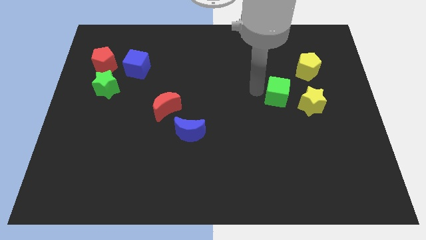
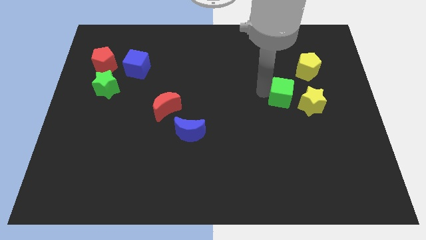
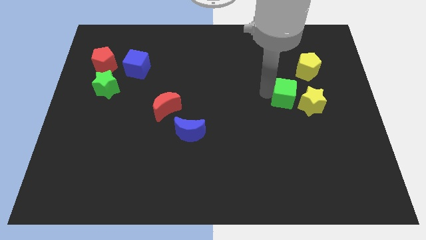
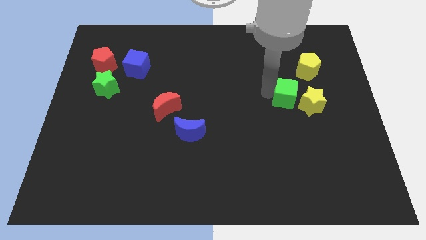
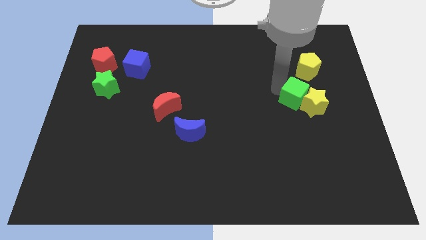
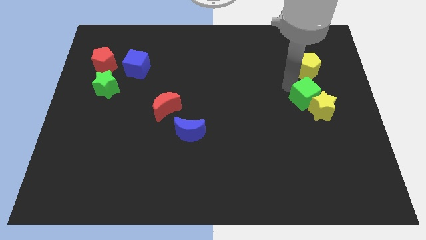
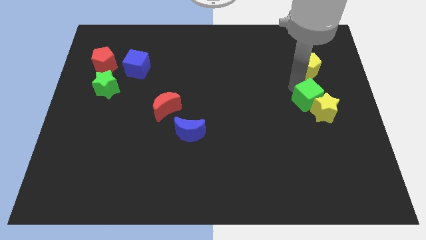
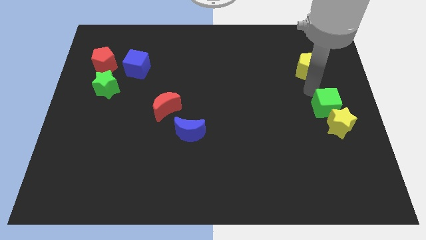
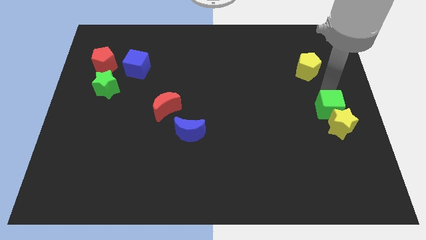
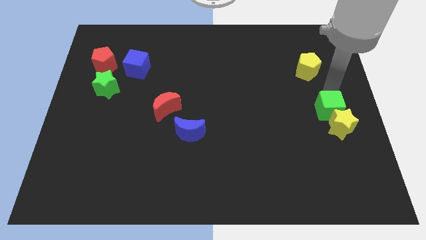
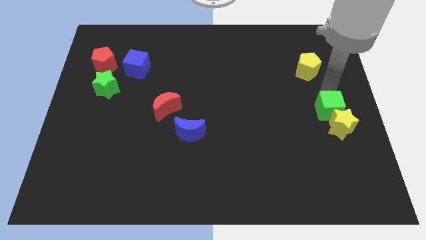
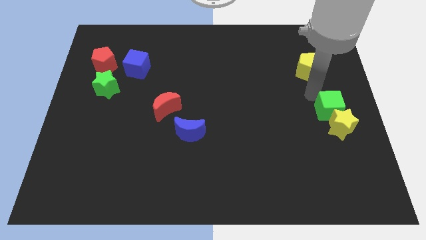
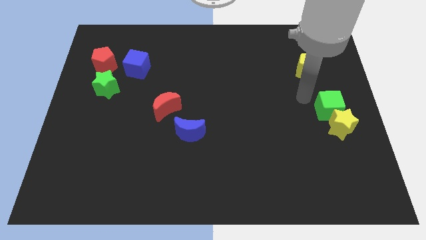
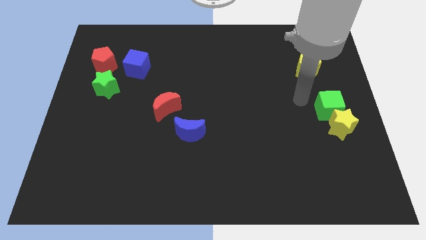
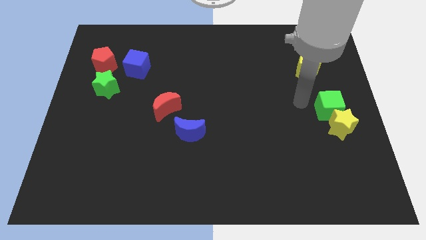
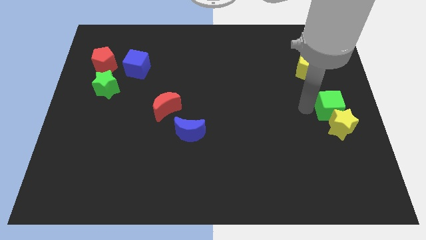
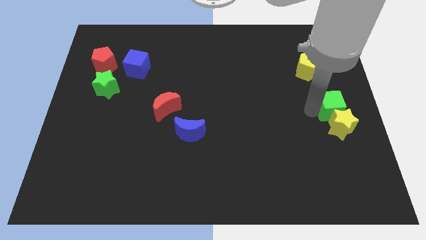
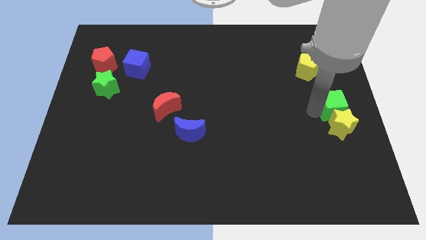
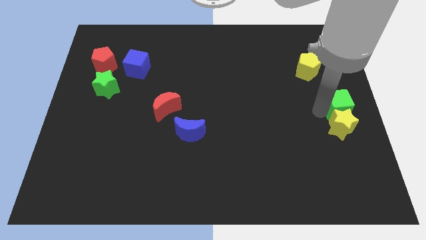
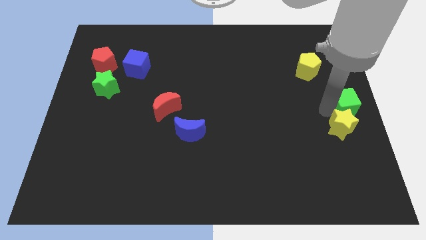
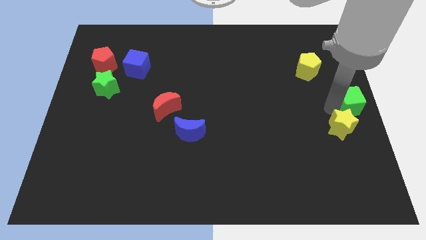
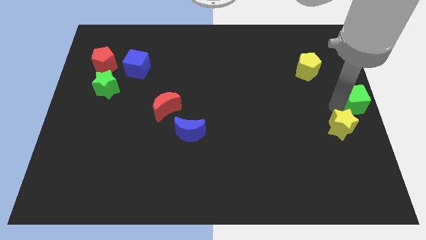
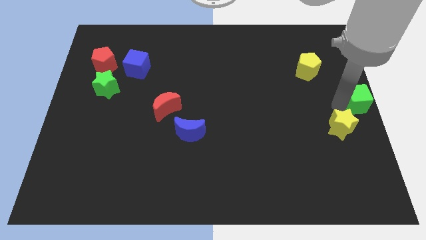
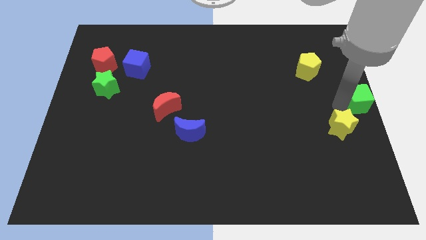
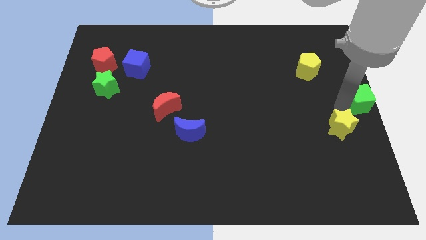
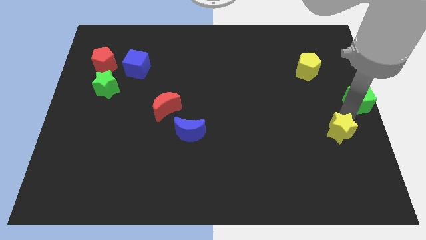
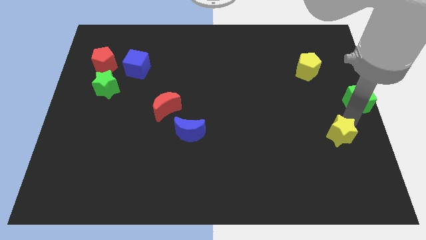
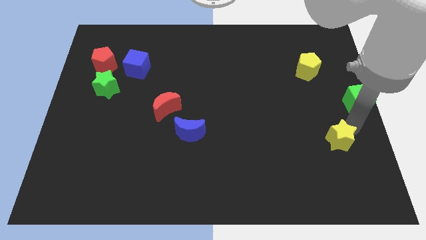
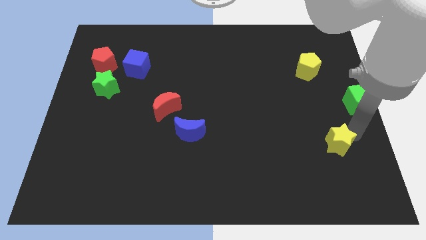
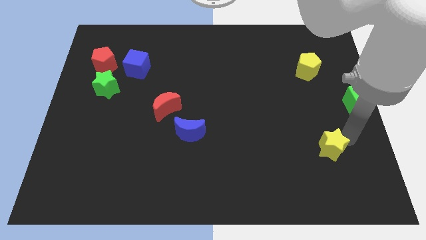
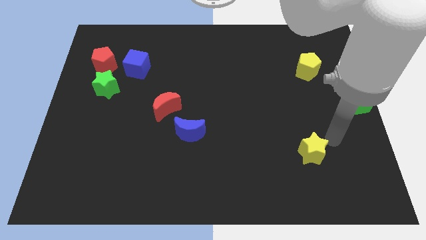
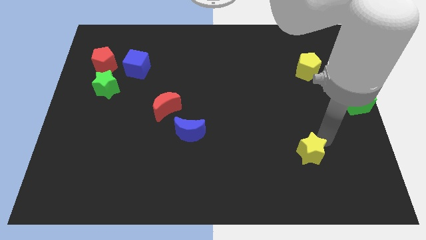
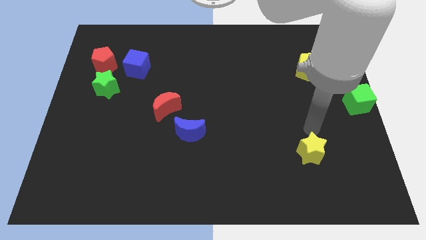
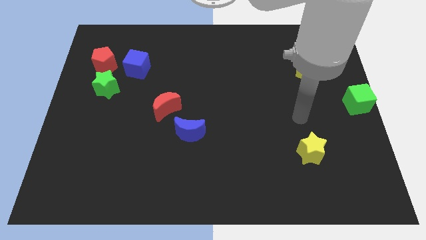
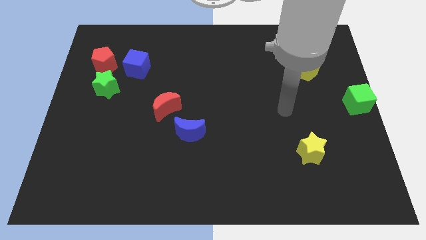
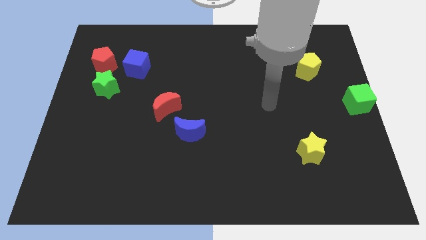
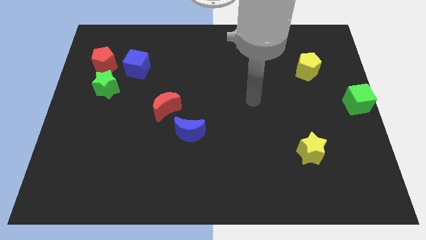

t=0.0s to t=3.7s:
make a triangle with the green cube yellow star and yellow pentagon at the right side of the board

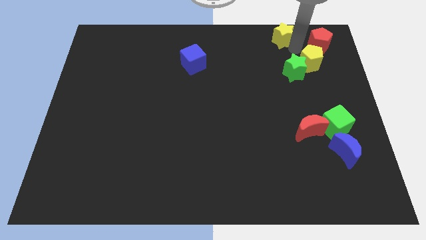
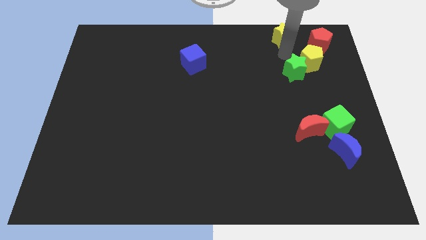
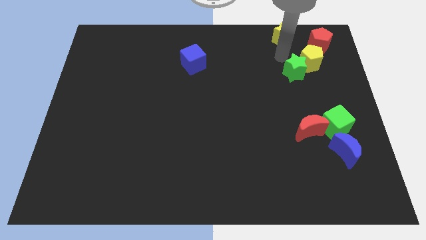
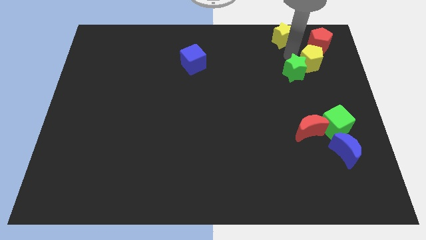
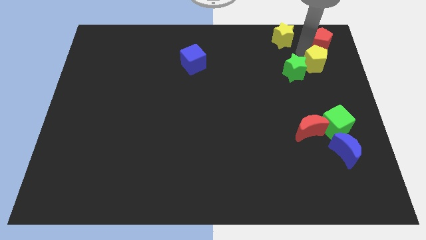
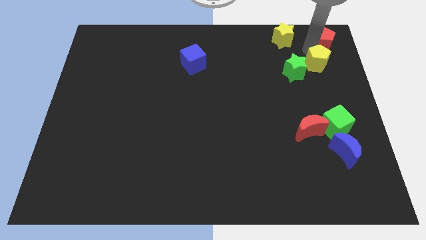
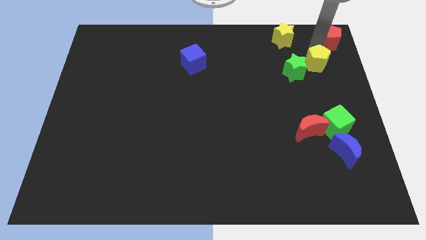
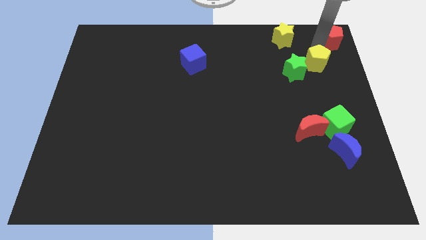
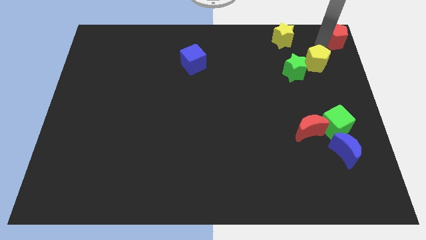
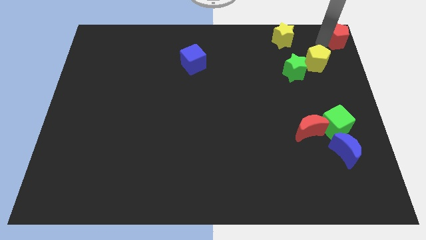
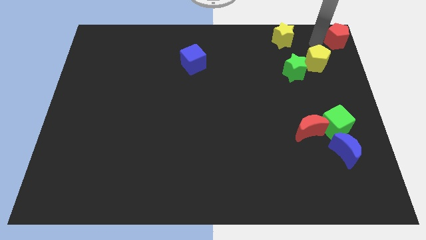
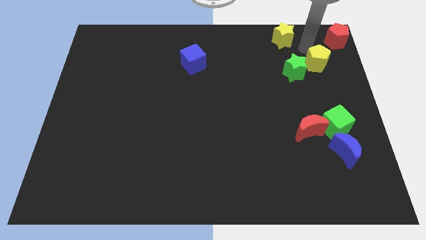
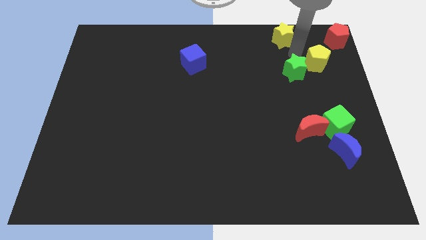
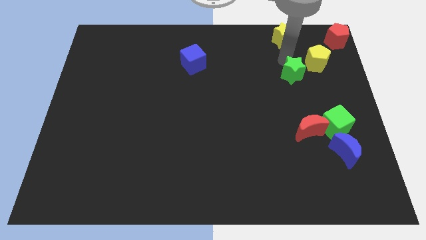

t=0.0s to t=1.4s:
place red pentagon to the top right corner of the board

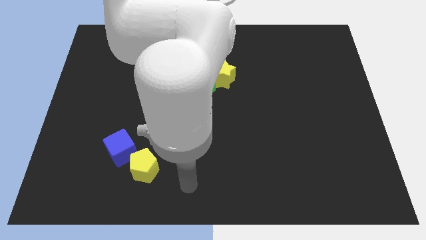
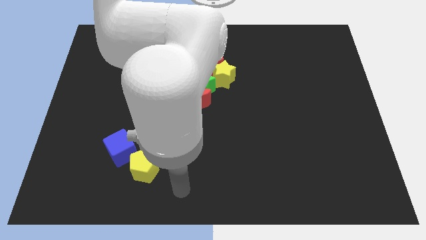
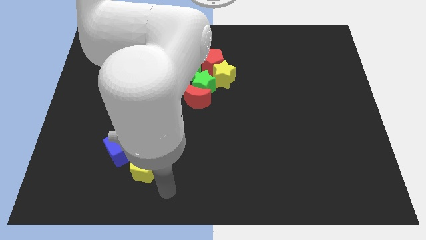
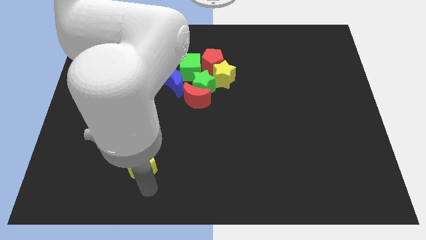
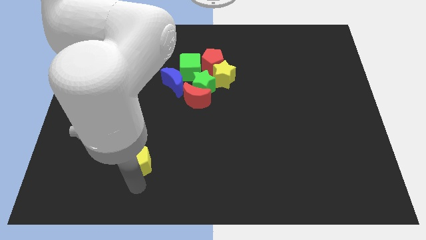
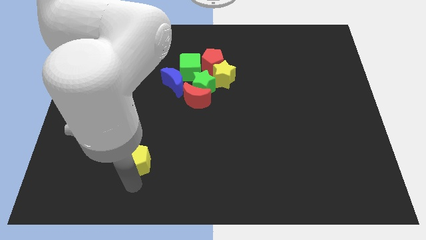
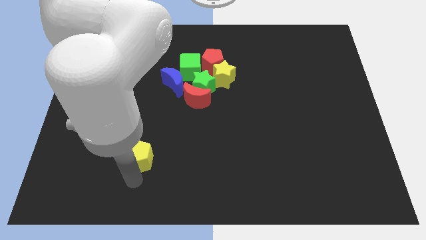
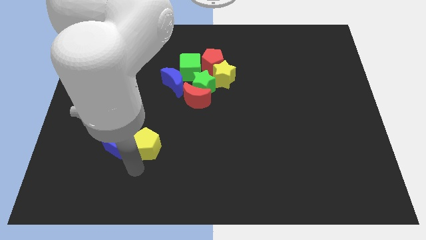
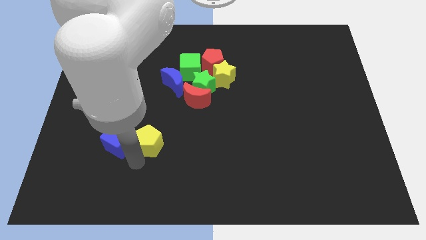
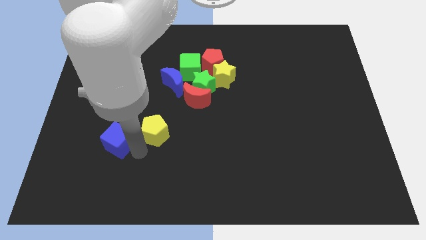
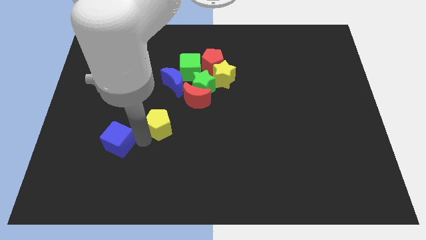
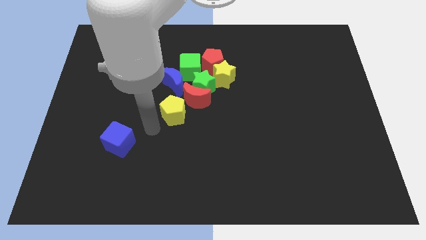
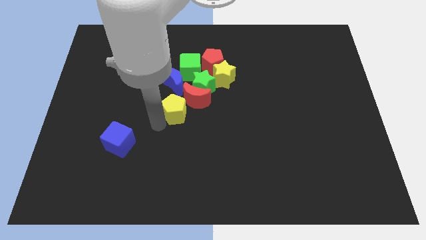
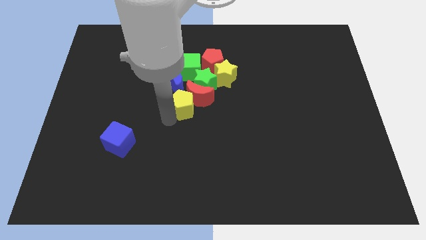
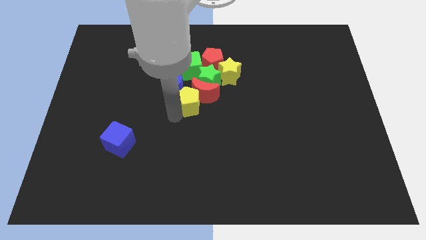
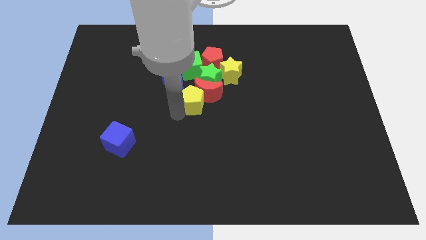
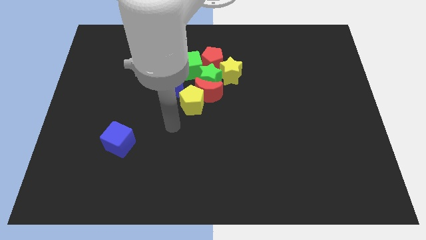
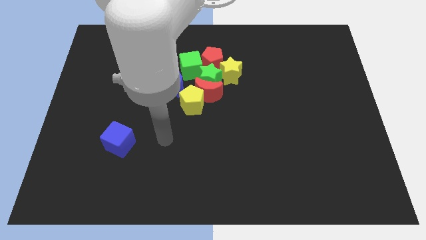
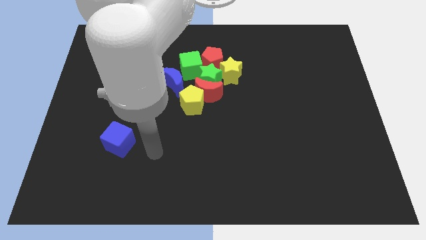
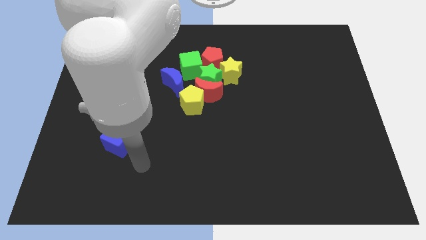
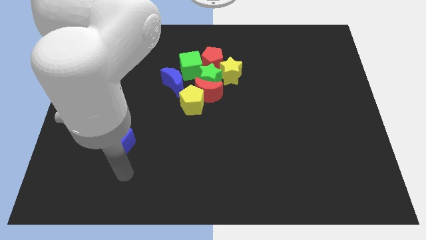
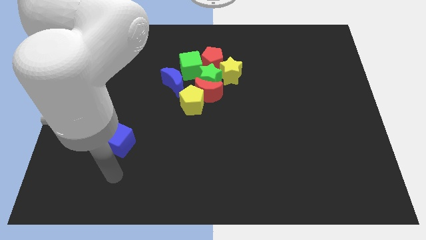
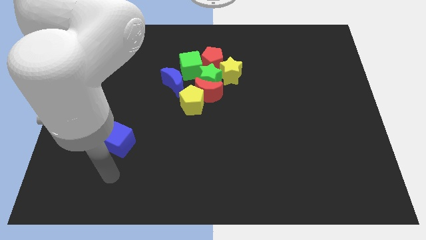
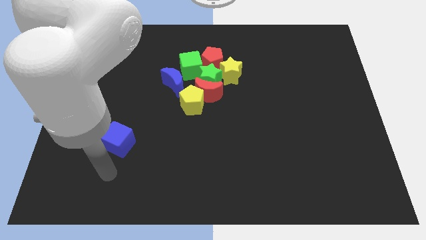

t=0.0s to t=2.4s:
push the yellow pentagon into the group of blocks

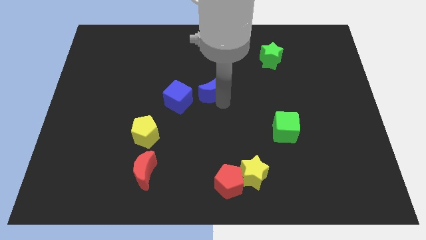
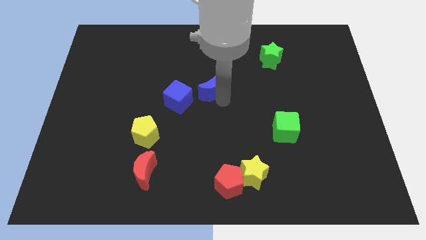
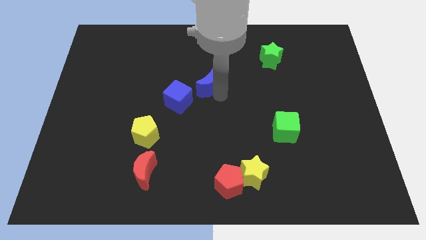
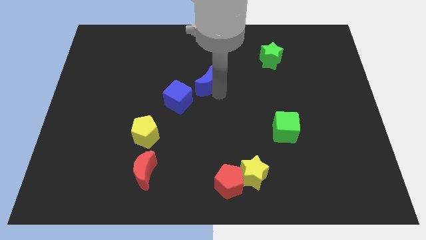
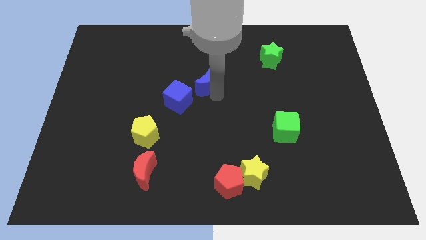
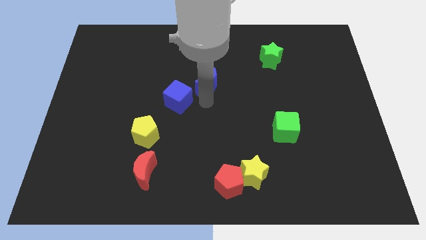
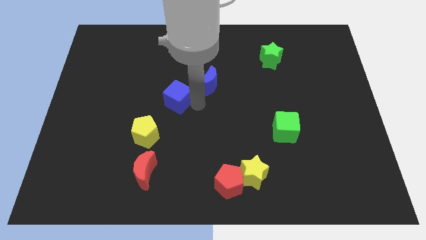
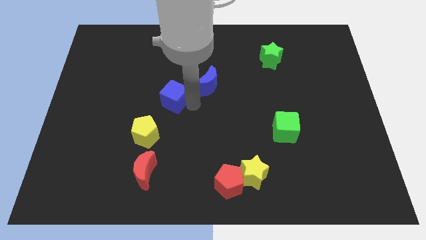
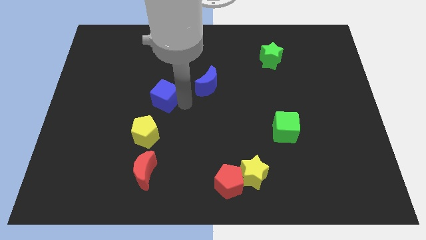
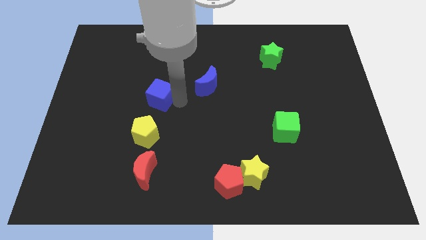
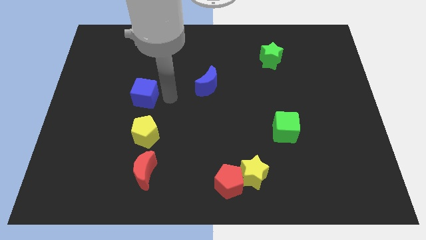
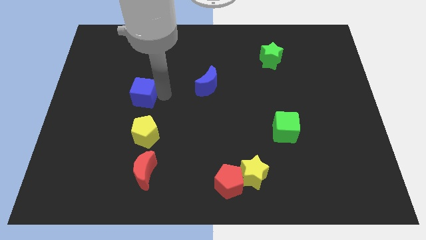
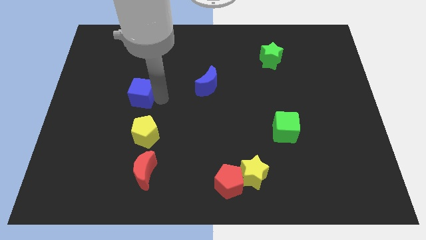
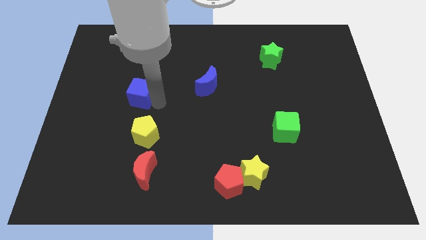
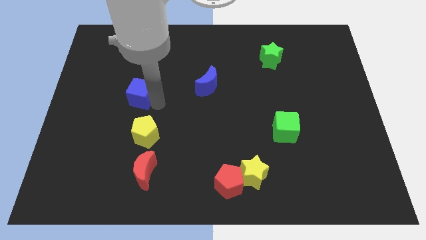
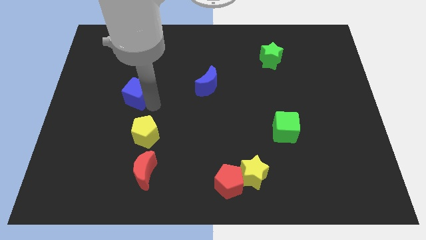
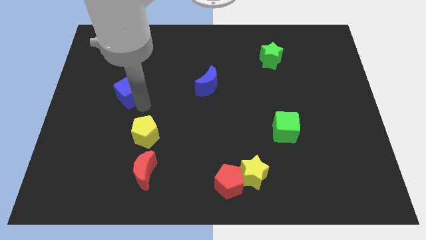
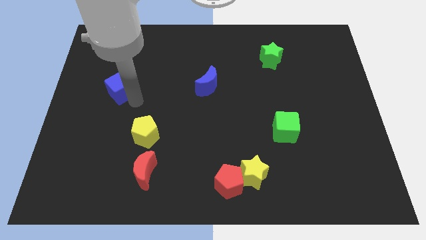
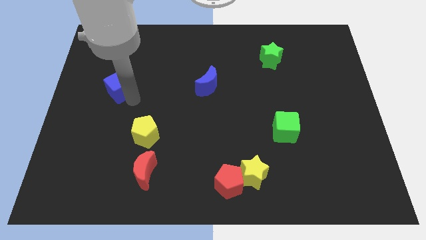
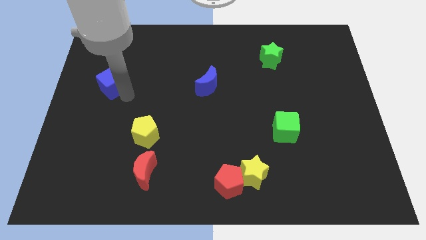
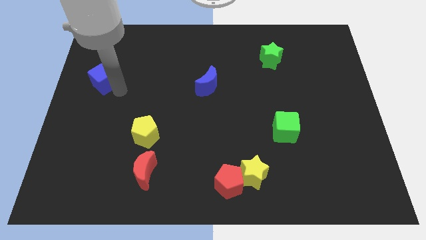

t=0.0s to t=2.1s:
move the blue cube away from the blue moon
